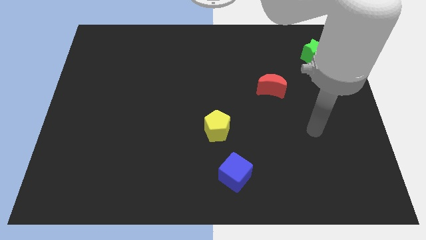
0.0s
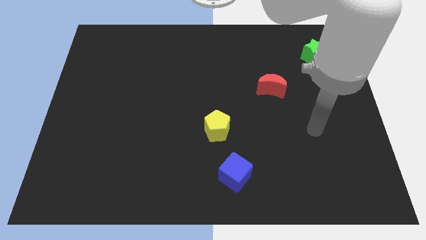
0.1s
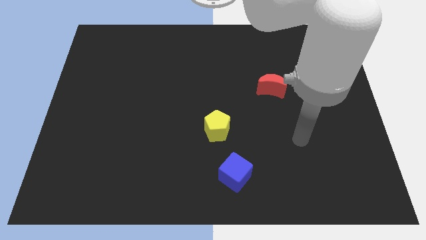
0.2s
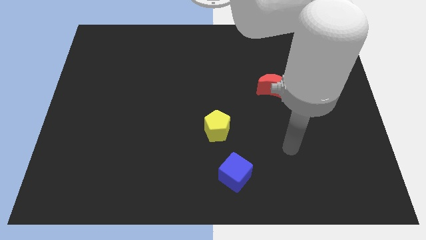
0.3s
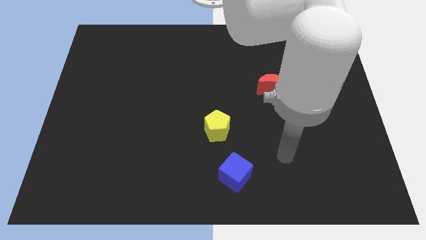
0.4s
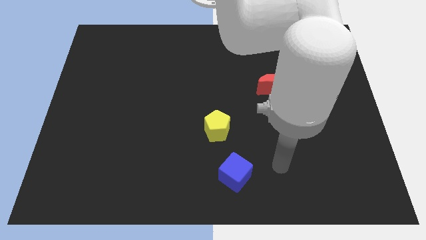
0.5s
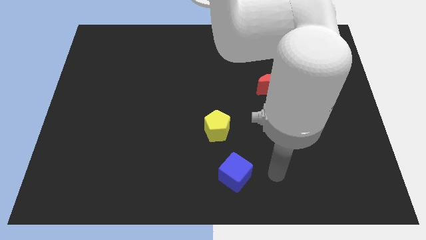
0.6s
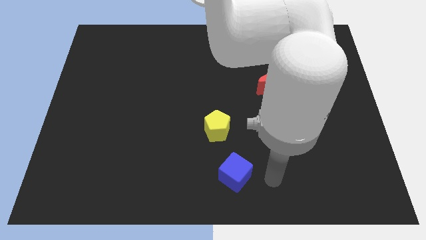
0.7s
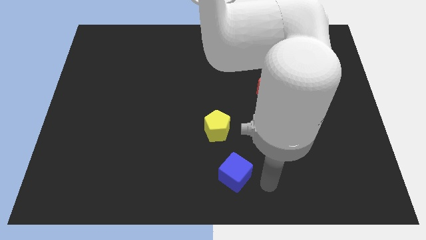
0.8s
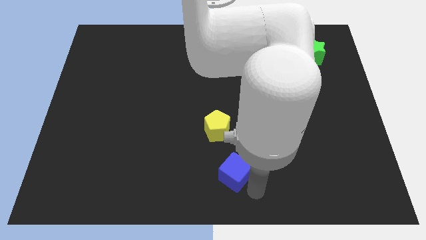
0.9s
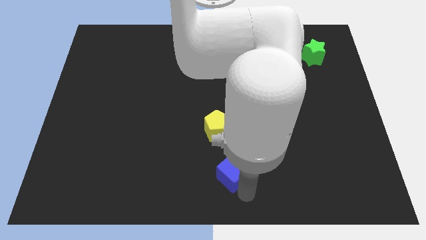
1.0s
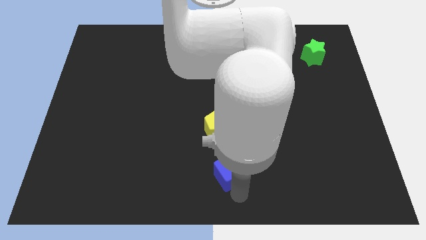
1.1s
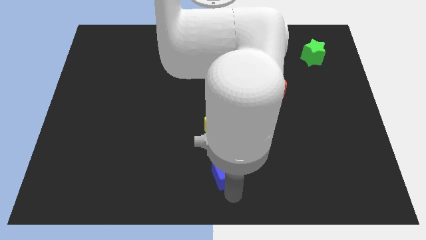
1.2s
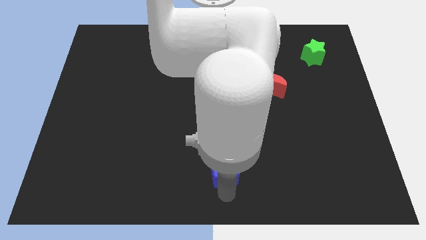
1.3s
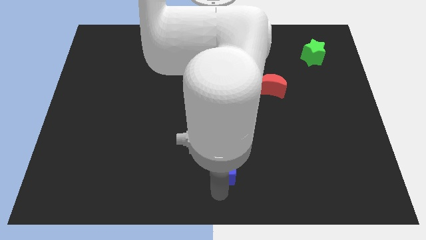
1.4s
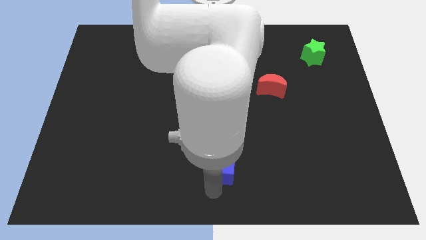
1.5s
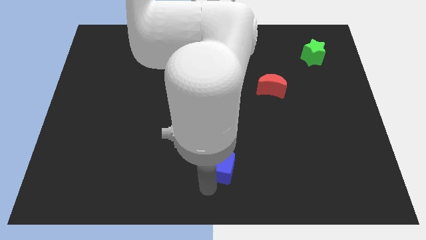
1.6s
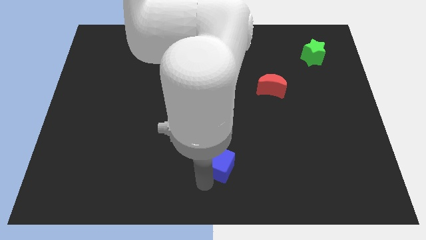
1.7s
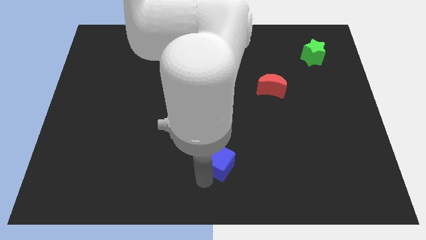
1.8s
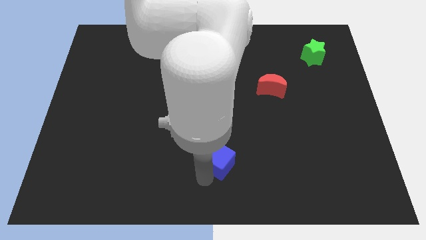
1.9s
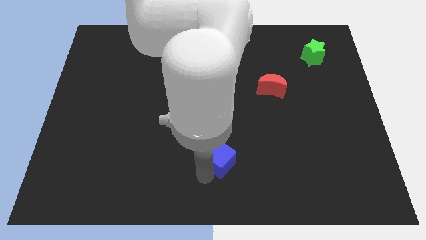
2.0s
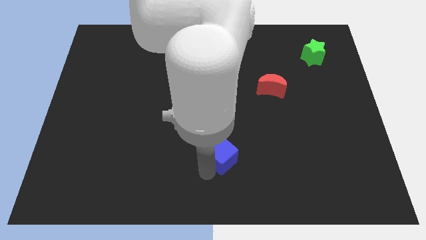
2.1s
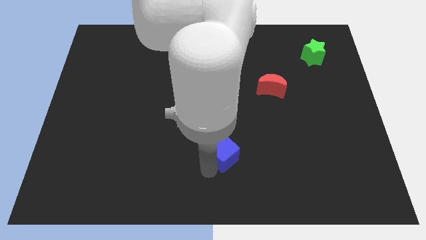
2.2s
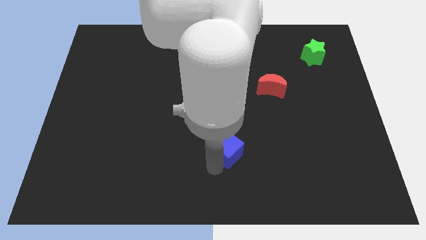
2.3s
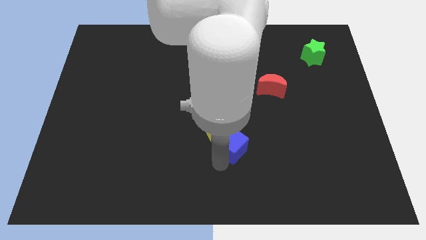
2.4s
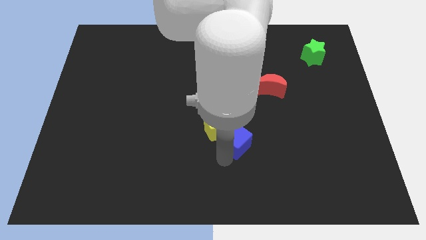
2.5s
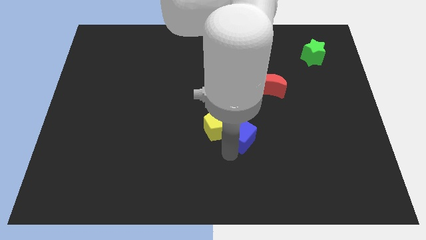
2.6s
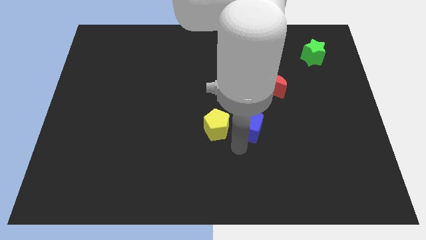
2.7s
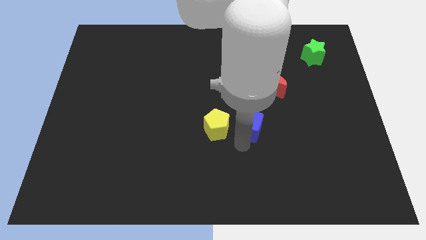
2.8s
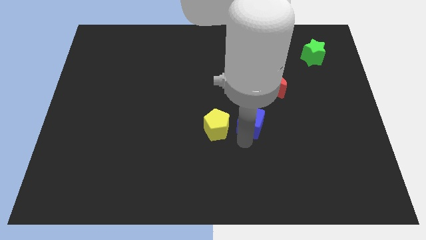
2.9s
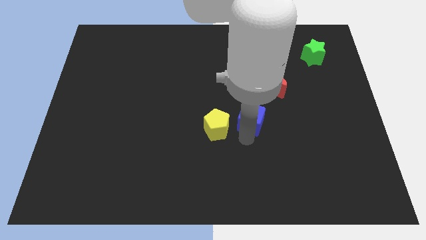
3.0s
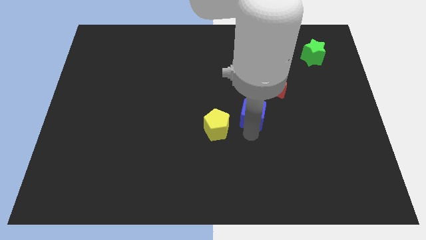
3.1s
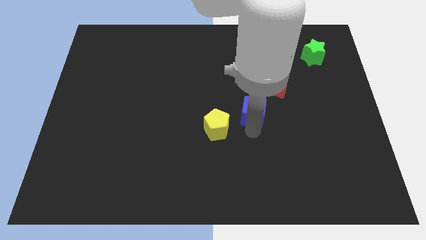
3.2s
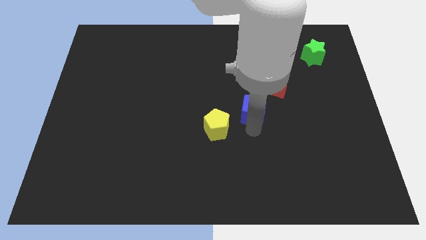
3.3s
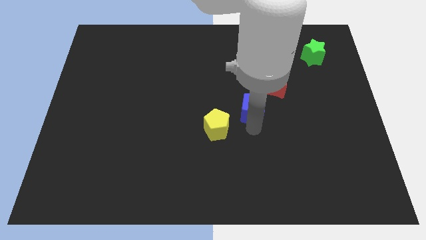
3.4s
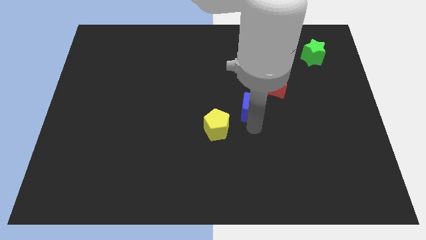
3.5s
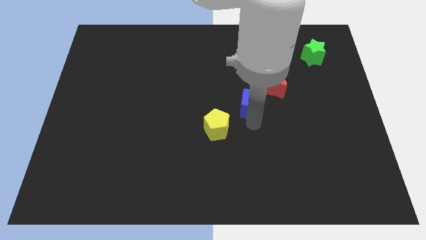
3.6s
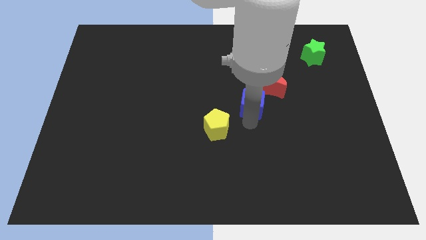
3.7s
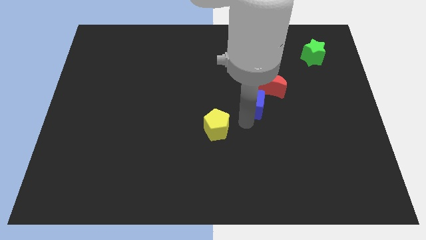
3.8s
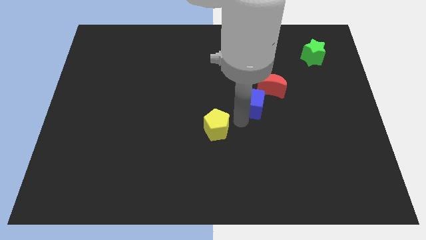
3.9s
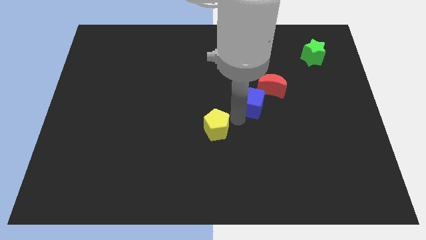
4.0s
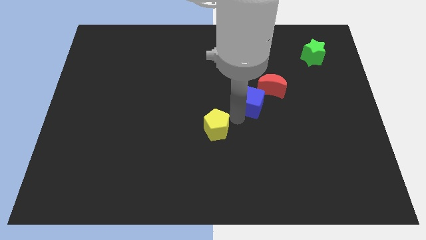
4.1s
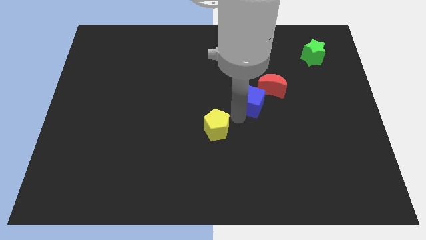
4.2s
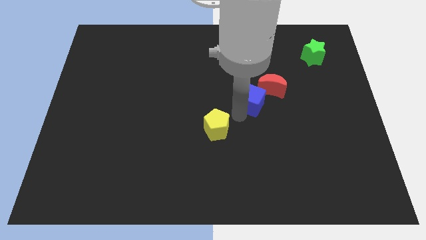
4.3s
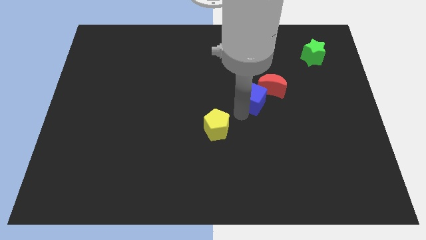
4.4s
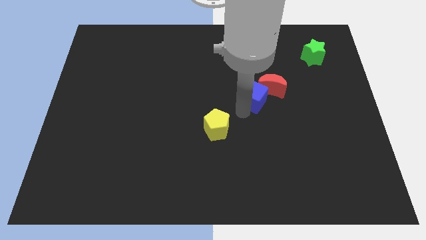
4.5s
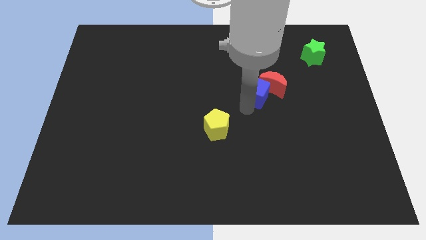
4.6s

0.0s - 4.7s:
put the cube towards the moon

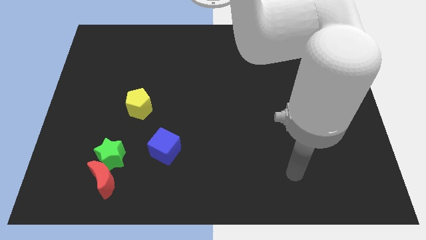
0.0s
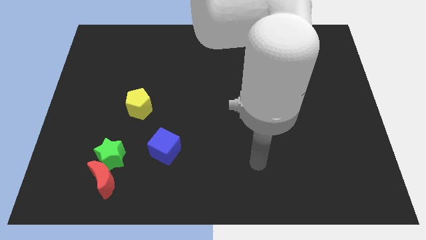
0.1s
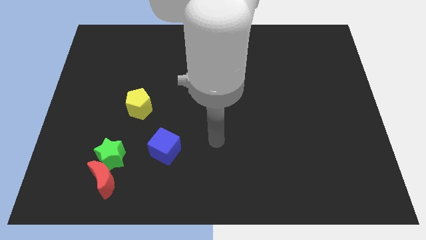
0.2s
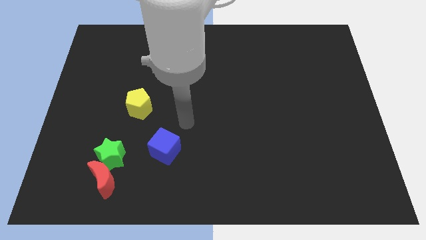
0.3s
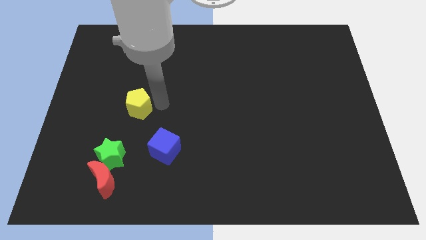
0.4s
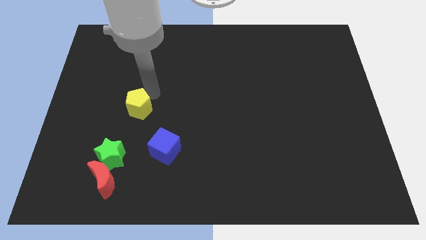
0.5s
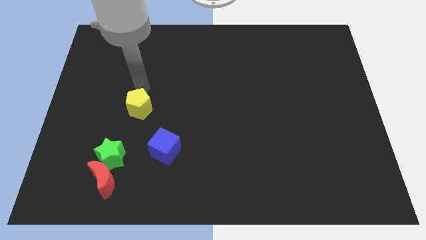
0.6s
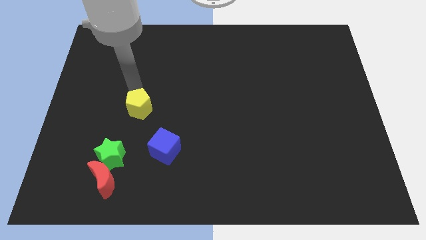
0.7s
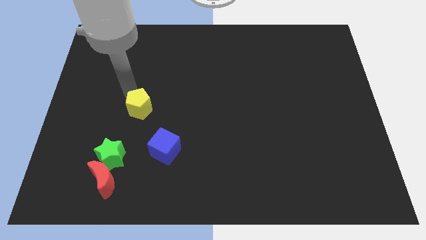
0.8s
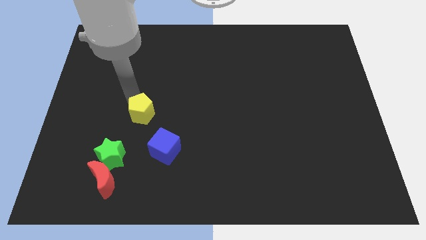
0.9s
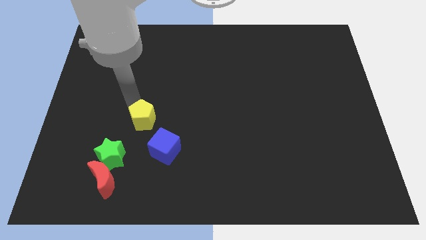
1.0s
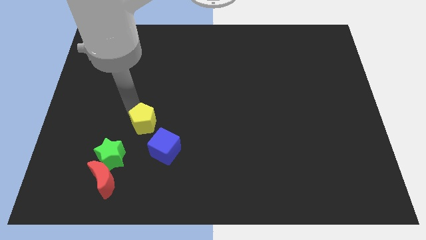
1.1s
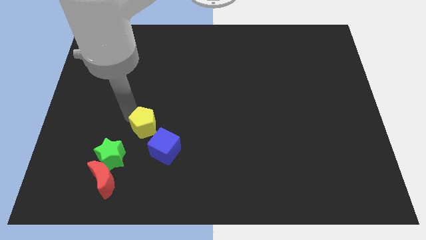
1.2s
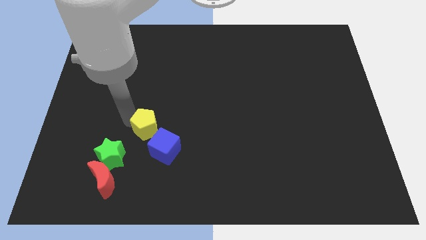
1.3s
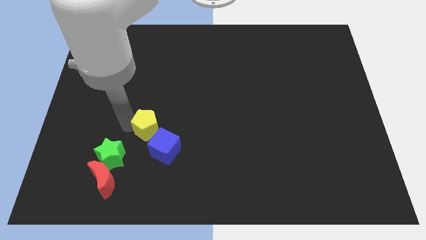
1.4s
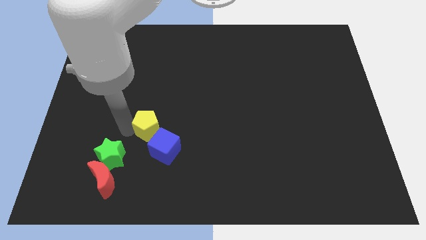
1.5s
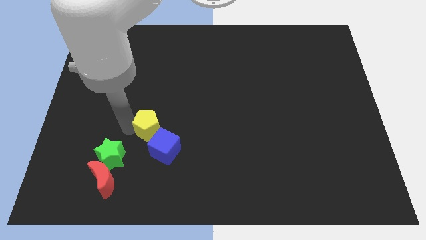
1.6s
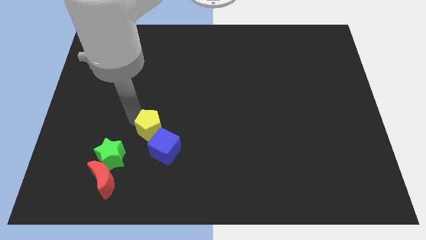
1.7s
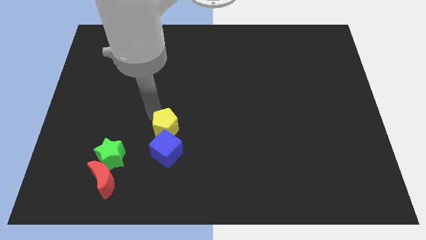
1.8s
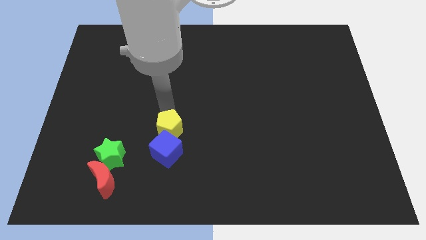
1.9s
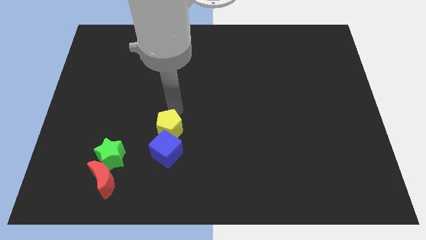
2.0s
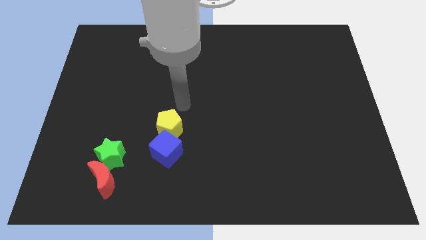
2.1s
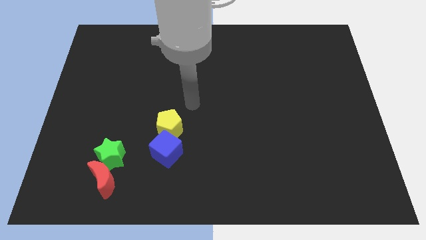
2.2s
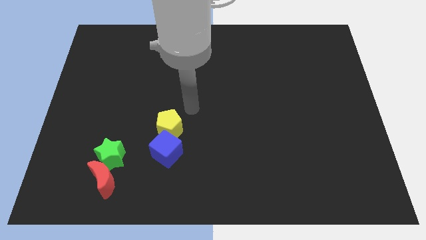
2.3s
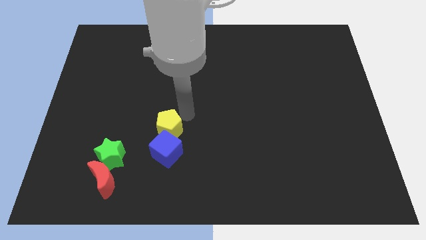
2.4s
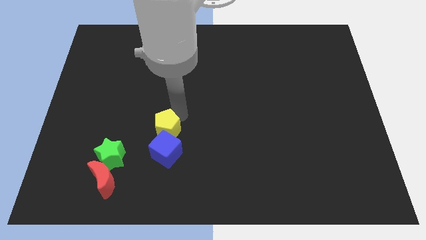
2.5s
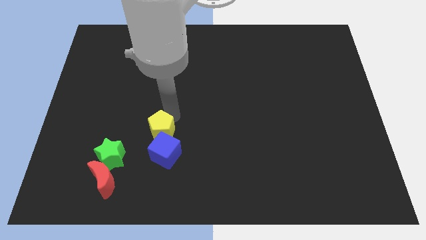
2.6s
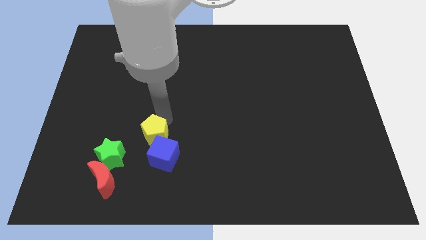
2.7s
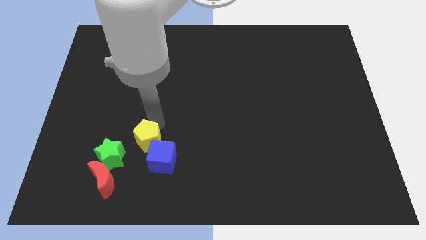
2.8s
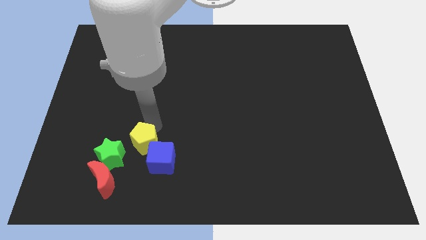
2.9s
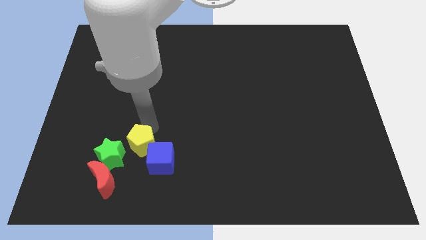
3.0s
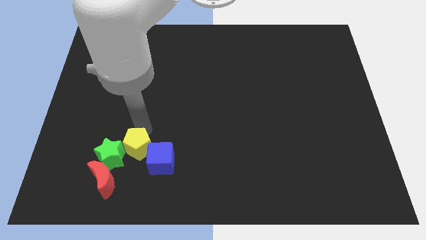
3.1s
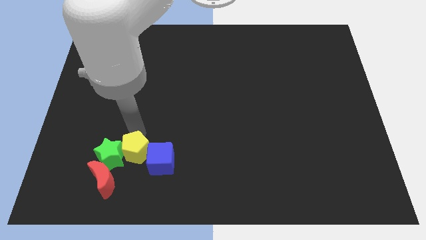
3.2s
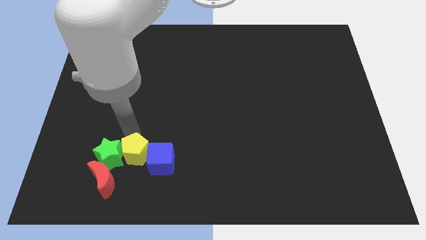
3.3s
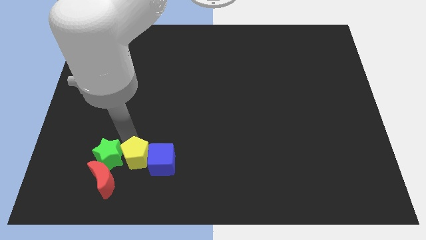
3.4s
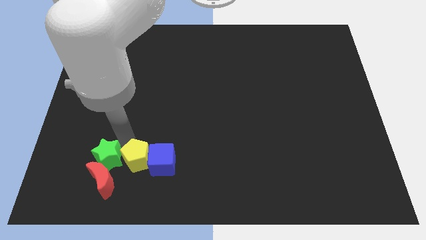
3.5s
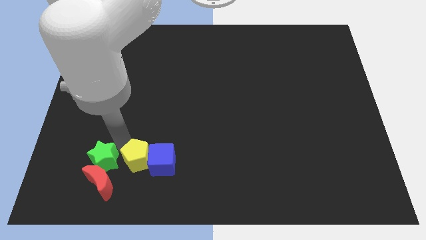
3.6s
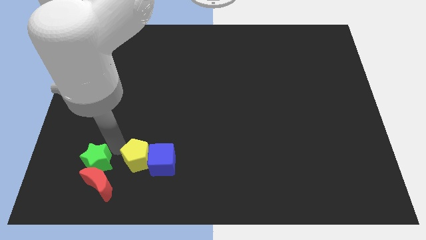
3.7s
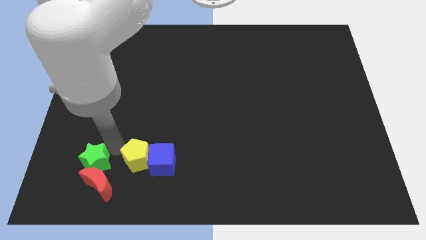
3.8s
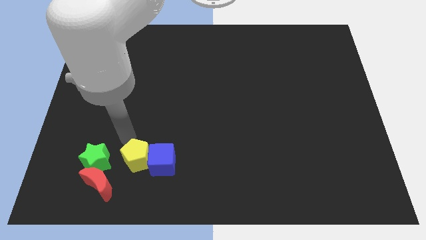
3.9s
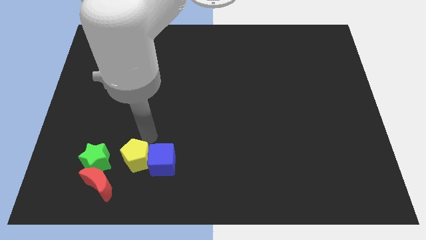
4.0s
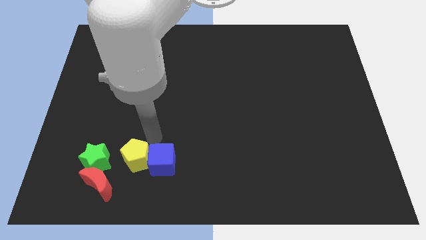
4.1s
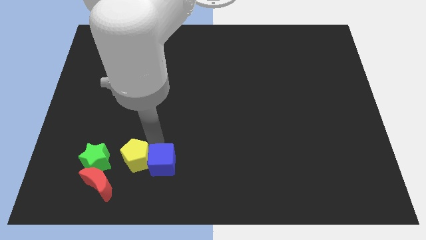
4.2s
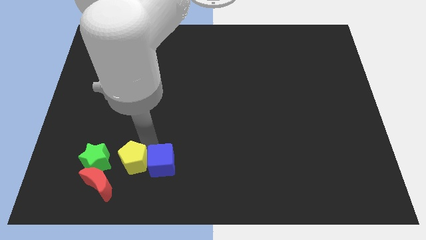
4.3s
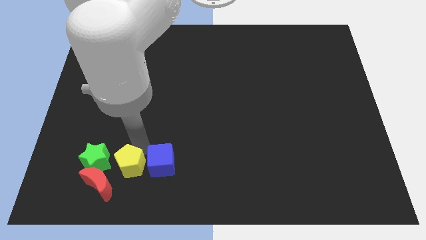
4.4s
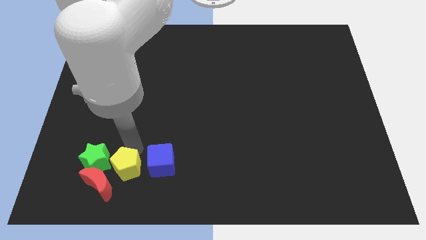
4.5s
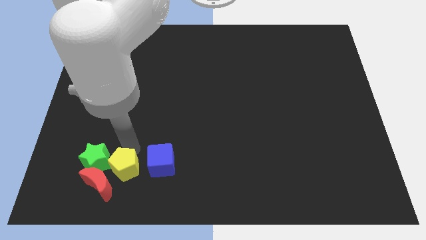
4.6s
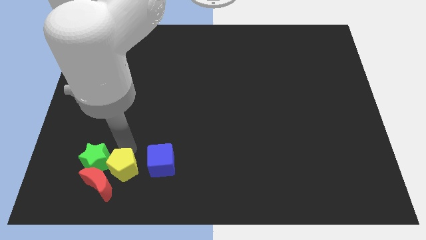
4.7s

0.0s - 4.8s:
slide the yellow pentagon towards the moon
